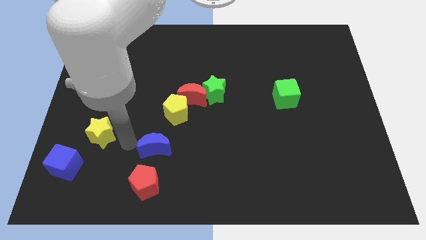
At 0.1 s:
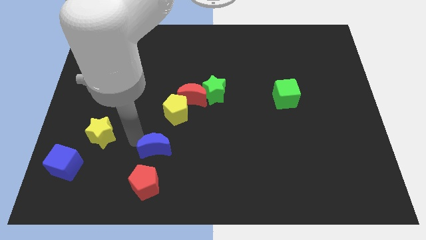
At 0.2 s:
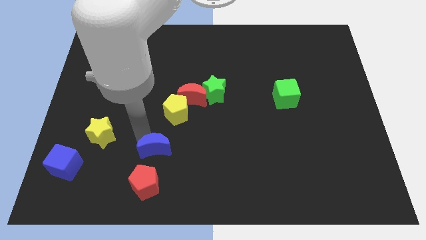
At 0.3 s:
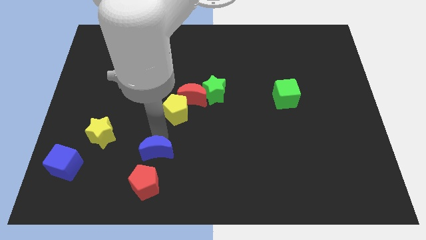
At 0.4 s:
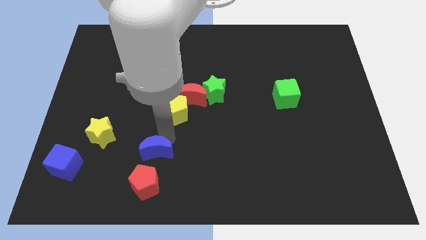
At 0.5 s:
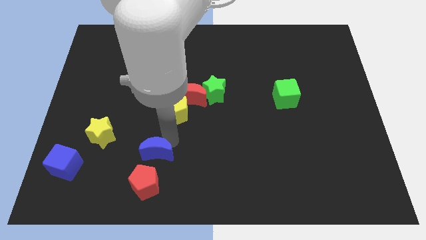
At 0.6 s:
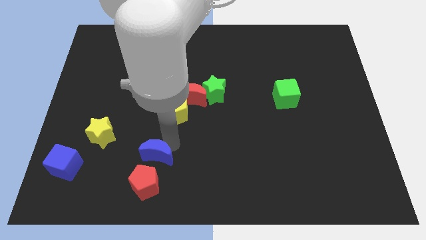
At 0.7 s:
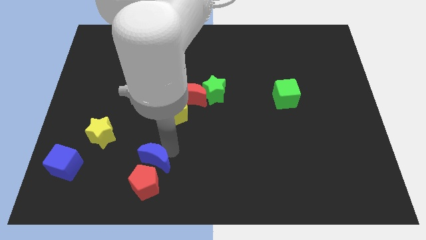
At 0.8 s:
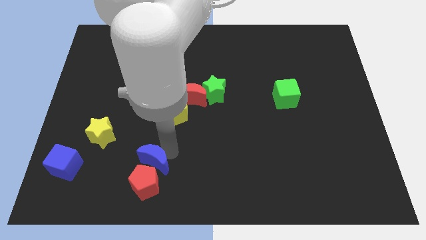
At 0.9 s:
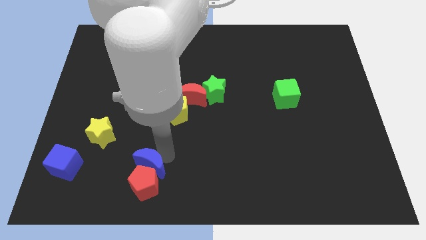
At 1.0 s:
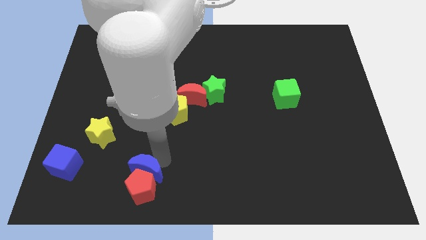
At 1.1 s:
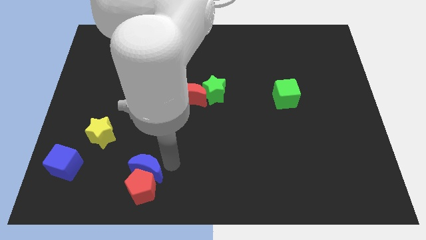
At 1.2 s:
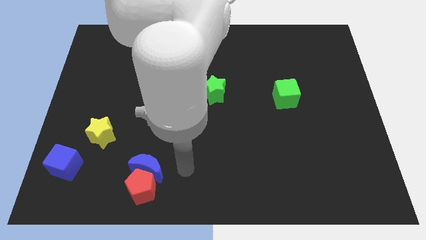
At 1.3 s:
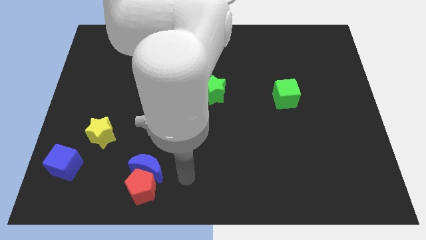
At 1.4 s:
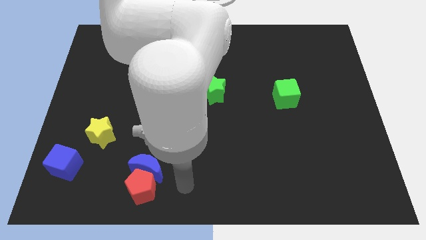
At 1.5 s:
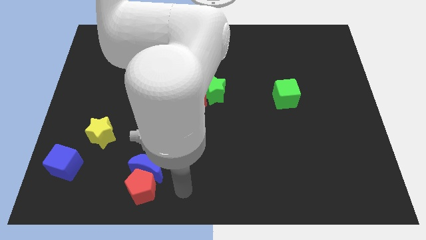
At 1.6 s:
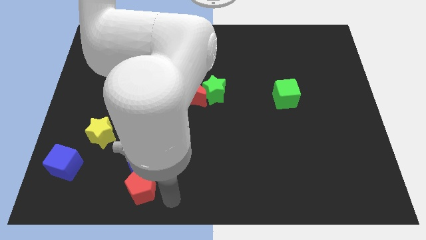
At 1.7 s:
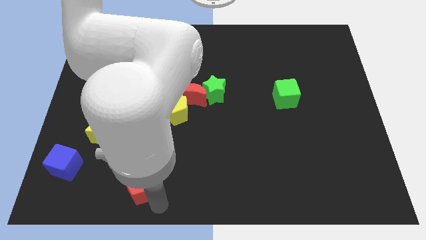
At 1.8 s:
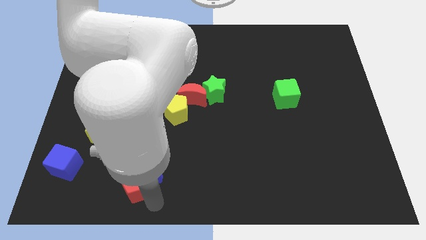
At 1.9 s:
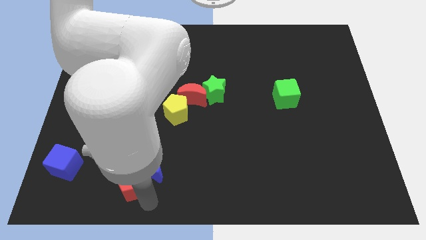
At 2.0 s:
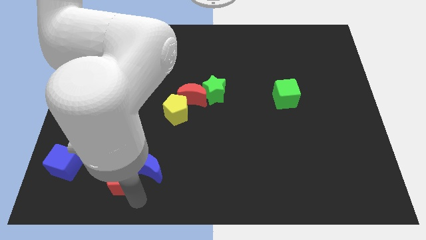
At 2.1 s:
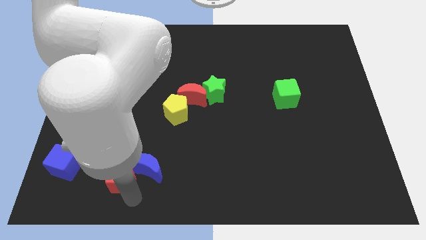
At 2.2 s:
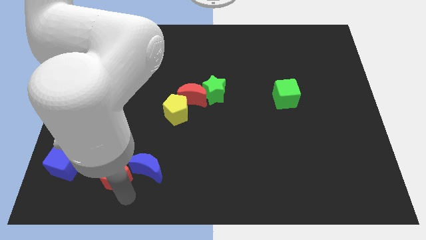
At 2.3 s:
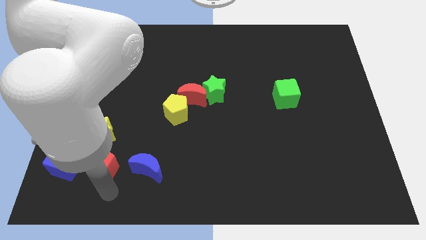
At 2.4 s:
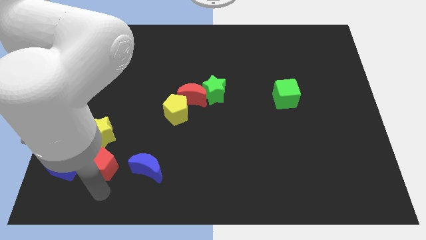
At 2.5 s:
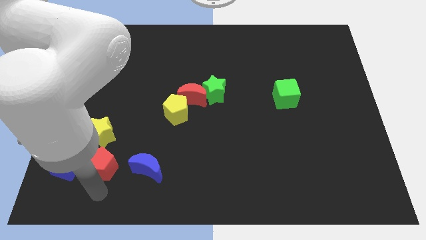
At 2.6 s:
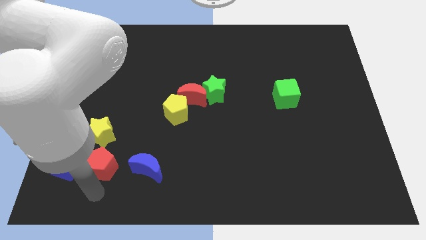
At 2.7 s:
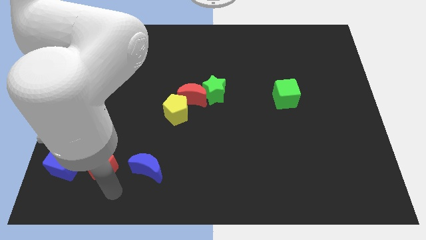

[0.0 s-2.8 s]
place red pentagon in between blue blocks

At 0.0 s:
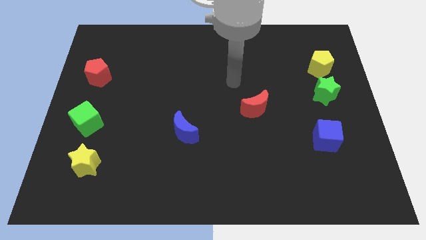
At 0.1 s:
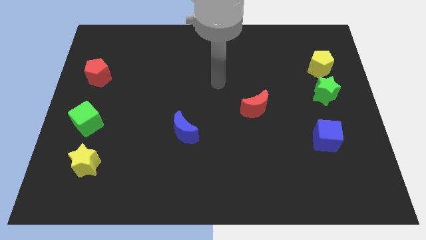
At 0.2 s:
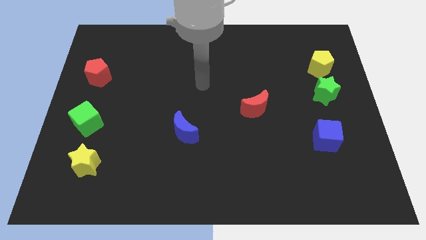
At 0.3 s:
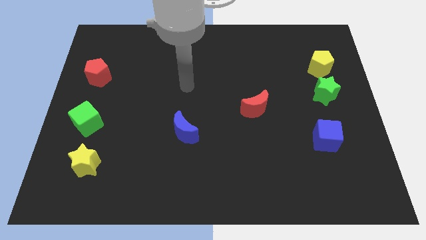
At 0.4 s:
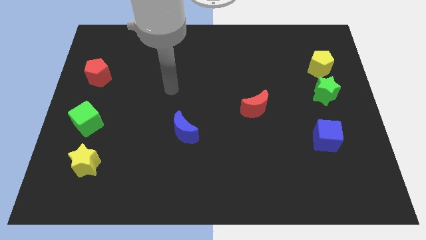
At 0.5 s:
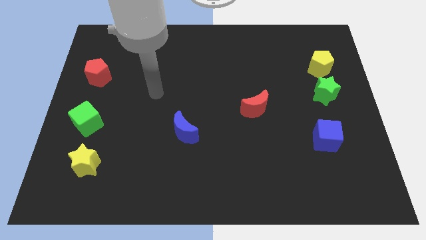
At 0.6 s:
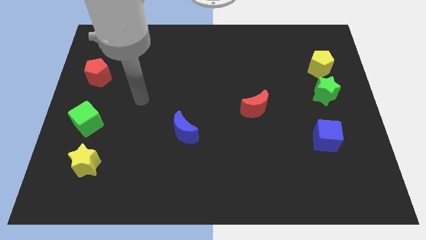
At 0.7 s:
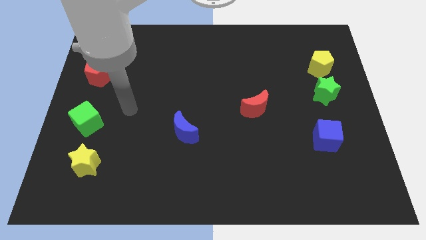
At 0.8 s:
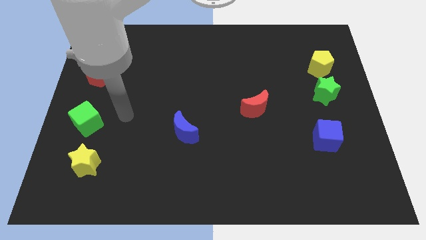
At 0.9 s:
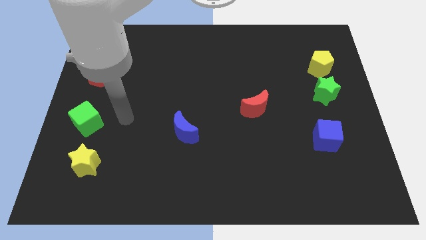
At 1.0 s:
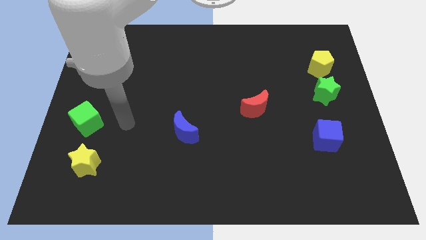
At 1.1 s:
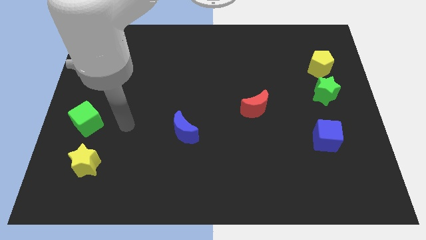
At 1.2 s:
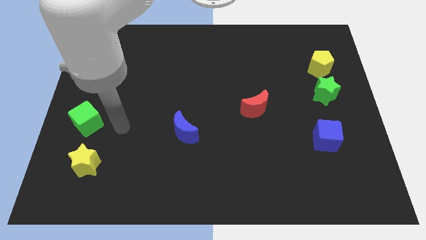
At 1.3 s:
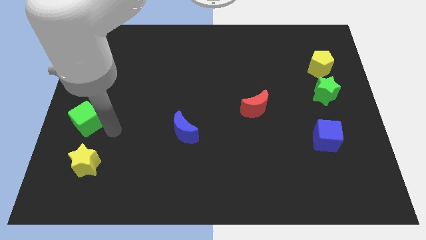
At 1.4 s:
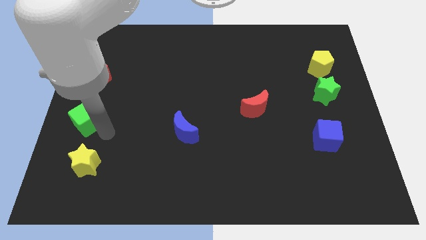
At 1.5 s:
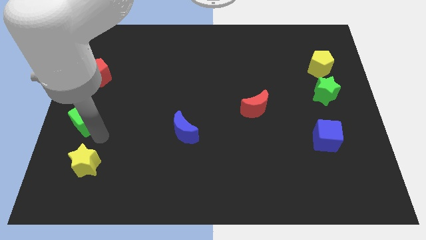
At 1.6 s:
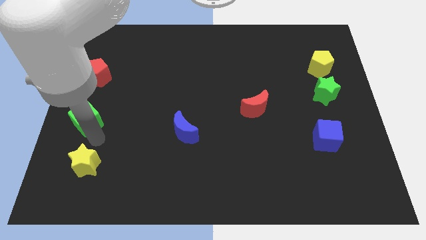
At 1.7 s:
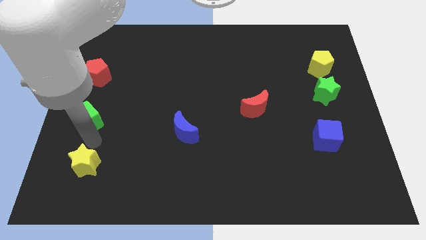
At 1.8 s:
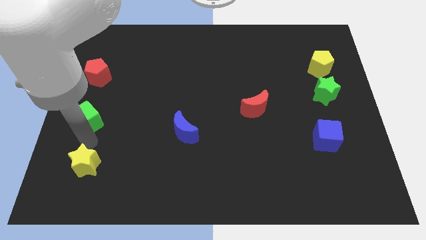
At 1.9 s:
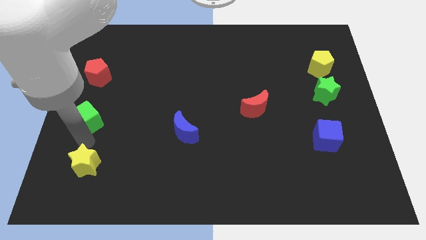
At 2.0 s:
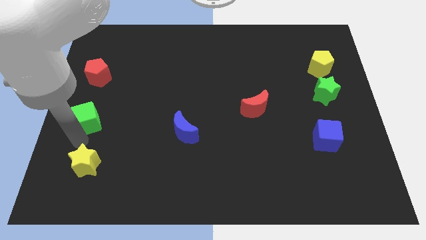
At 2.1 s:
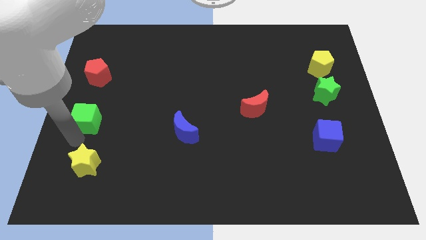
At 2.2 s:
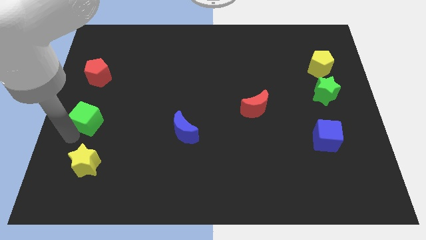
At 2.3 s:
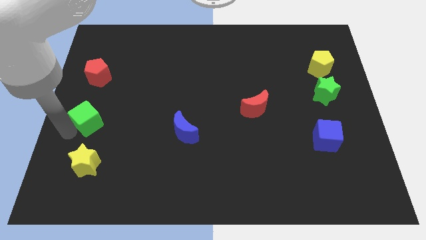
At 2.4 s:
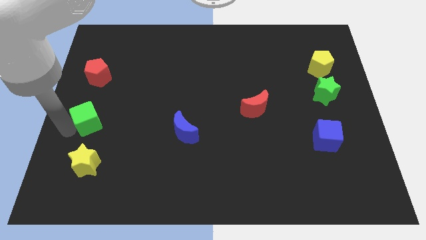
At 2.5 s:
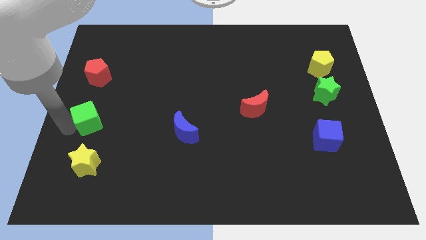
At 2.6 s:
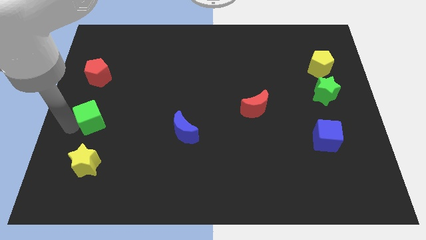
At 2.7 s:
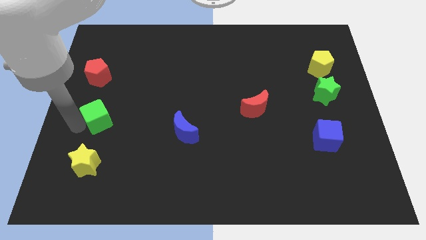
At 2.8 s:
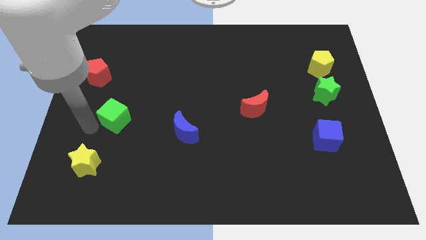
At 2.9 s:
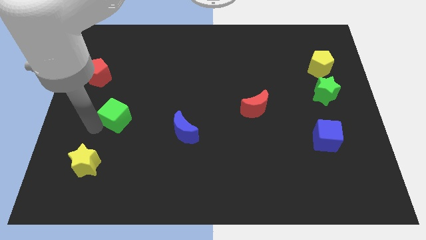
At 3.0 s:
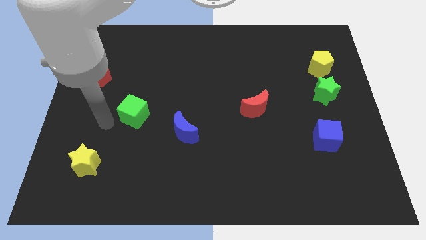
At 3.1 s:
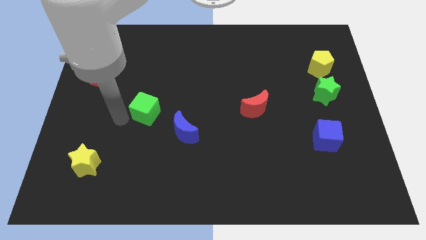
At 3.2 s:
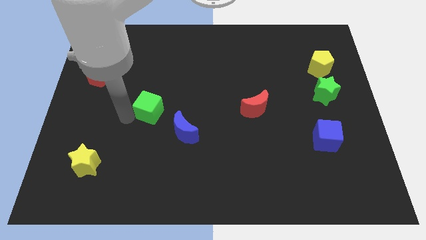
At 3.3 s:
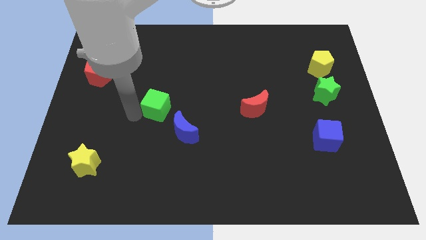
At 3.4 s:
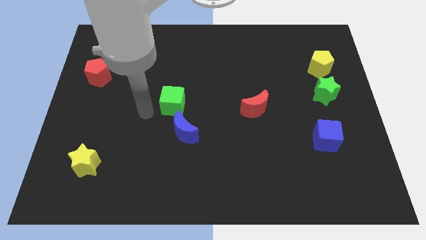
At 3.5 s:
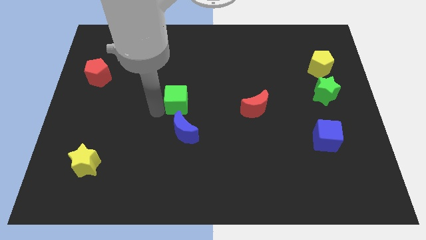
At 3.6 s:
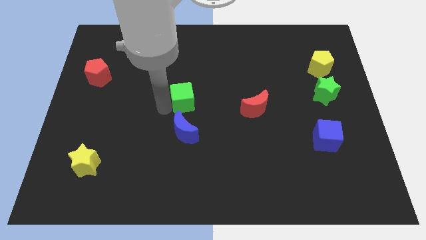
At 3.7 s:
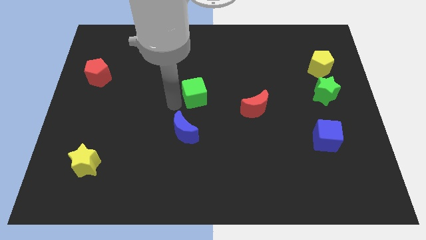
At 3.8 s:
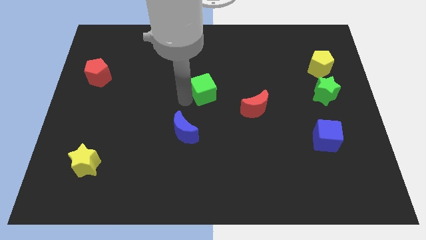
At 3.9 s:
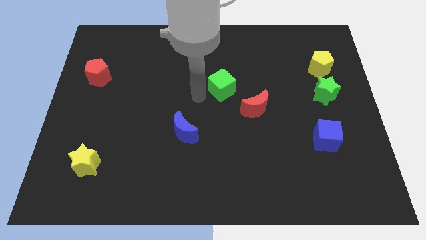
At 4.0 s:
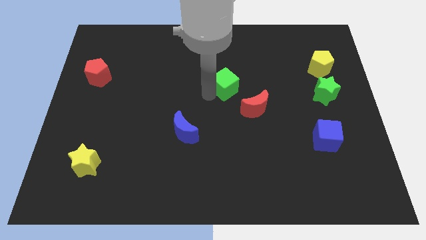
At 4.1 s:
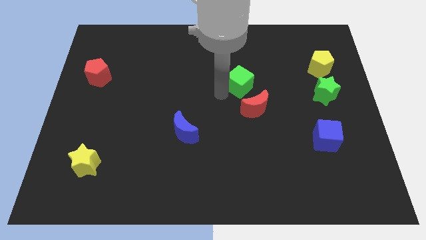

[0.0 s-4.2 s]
push the green cube to the center of the board

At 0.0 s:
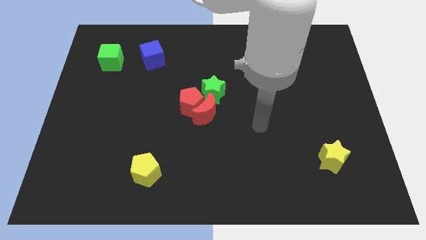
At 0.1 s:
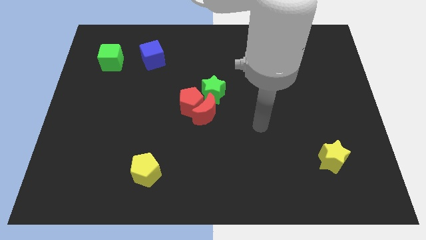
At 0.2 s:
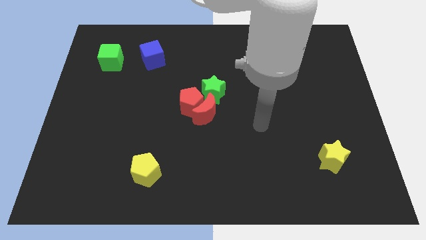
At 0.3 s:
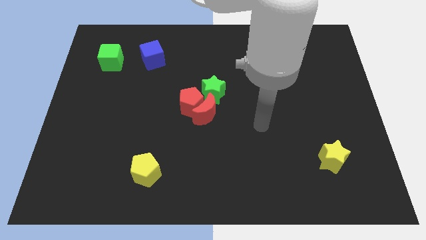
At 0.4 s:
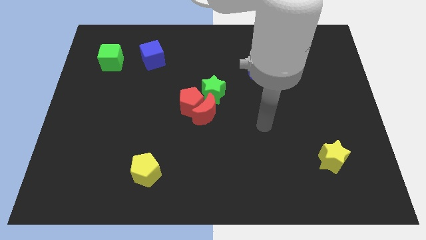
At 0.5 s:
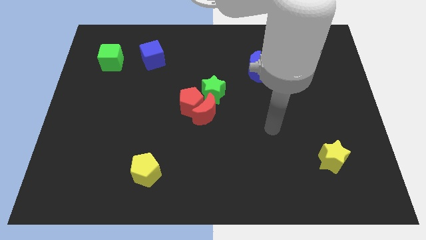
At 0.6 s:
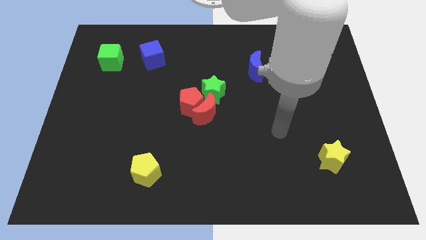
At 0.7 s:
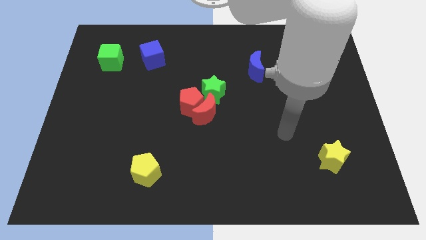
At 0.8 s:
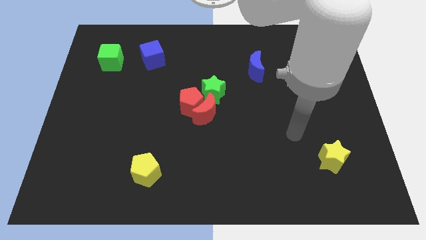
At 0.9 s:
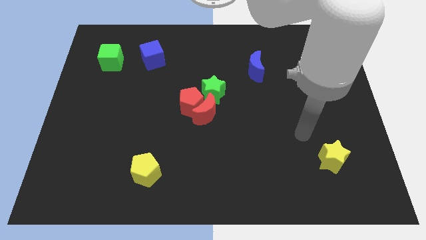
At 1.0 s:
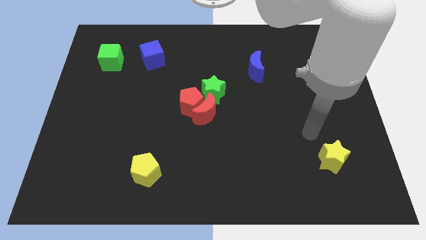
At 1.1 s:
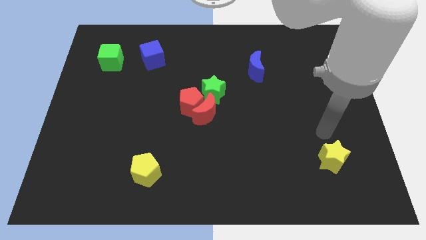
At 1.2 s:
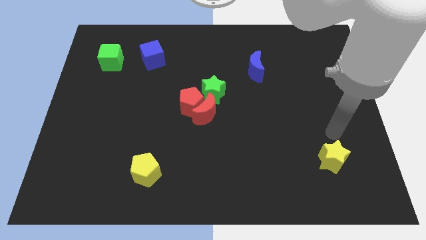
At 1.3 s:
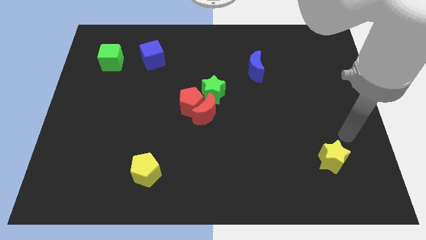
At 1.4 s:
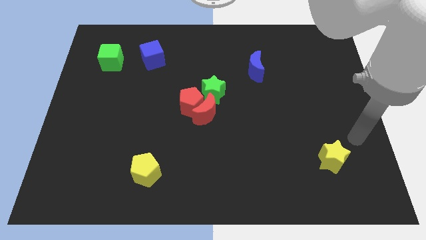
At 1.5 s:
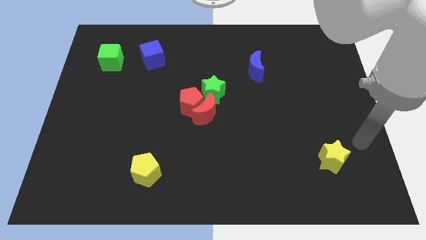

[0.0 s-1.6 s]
move the arm towards the yellow star

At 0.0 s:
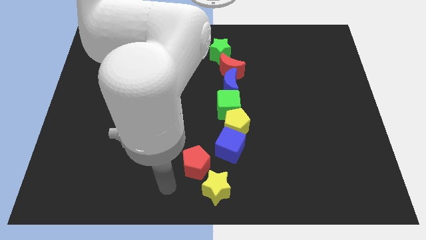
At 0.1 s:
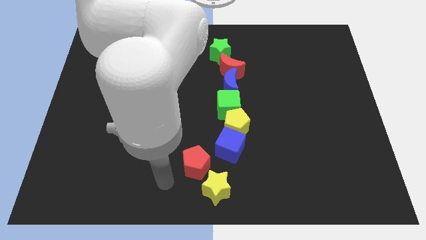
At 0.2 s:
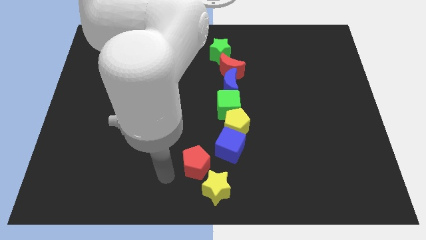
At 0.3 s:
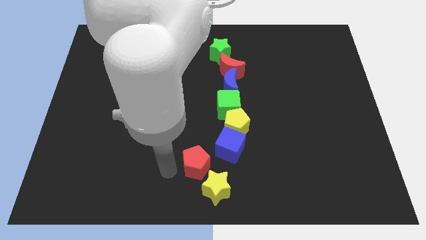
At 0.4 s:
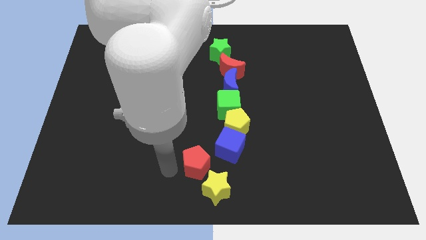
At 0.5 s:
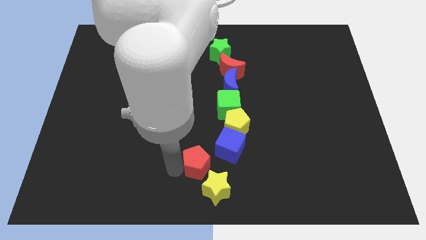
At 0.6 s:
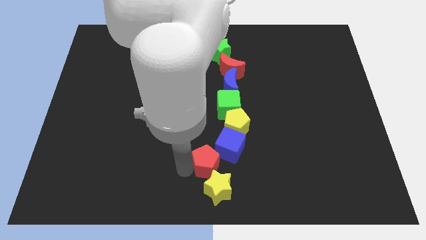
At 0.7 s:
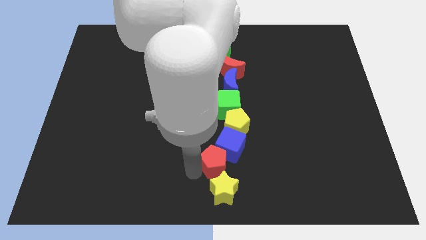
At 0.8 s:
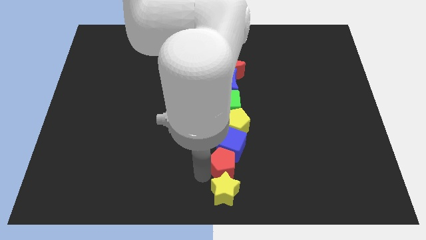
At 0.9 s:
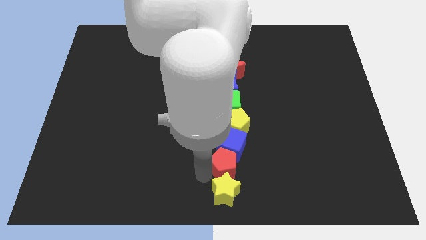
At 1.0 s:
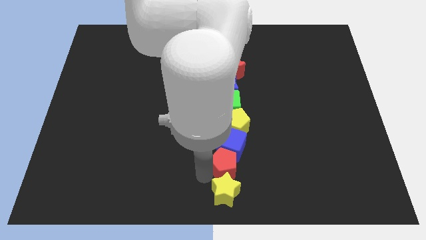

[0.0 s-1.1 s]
push red pentagon into blue cube
